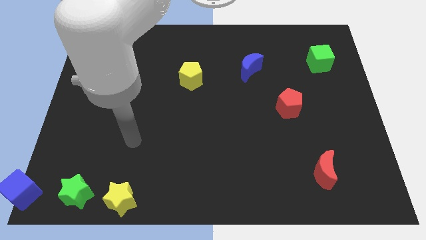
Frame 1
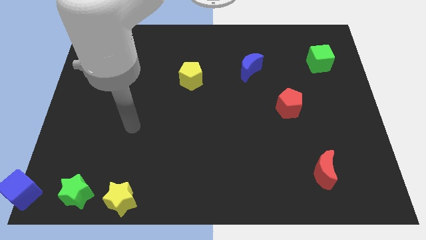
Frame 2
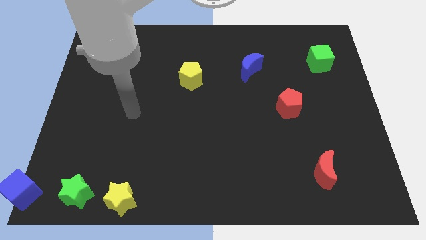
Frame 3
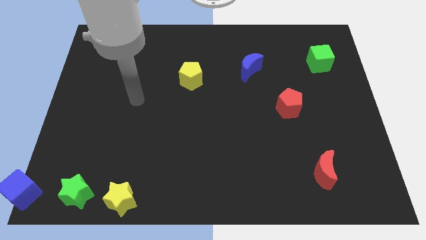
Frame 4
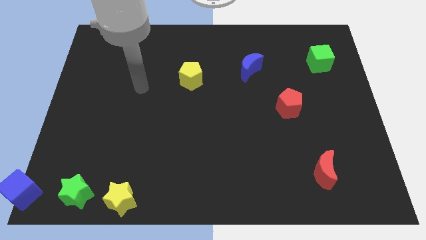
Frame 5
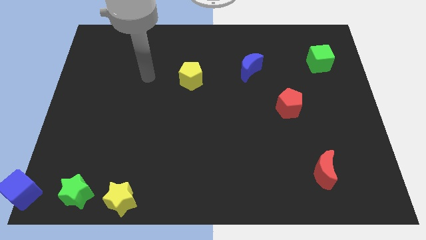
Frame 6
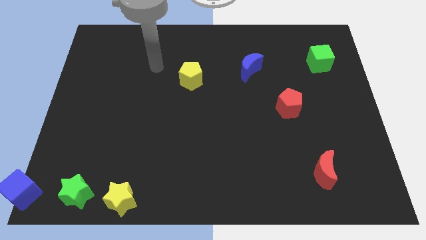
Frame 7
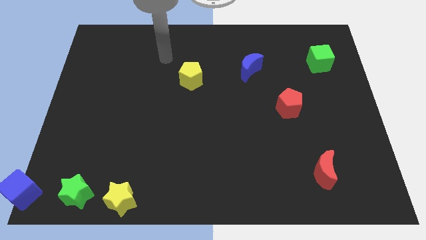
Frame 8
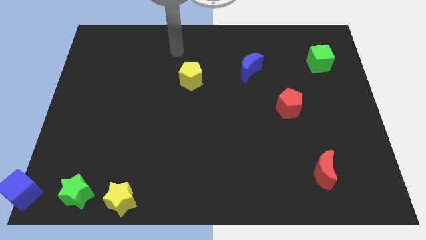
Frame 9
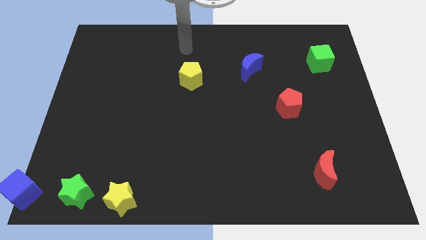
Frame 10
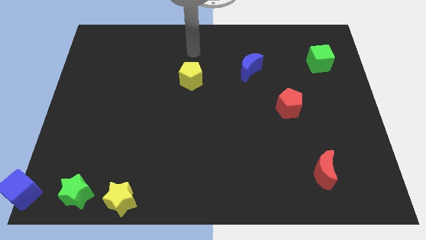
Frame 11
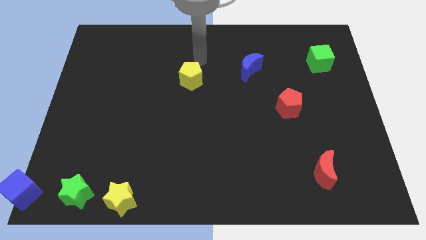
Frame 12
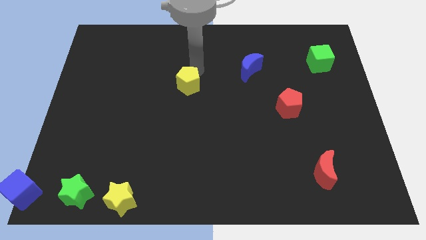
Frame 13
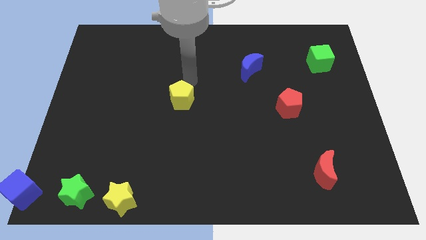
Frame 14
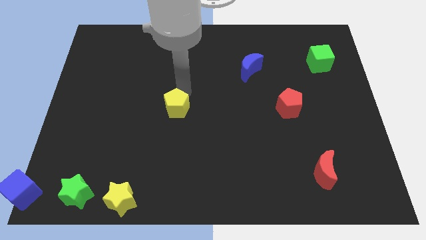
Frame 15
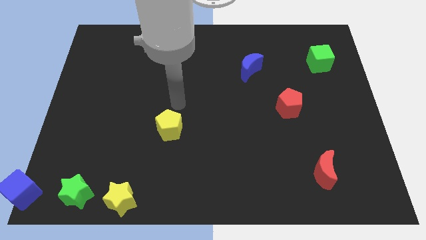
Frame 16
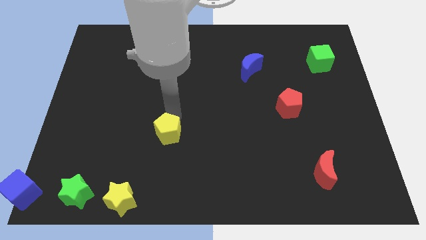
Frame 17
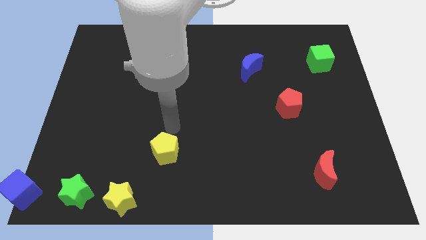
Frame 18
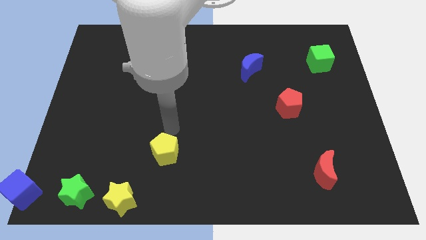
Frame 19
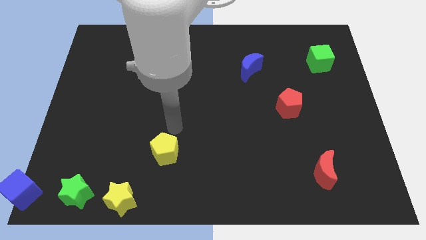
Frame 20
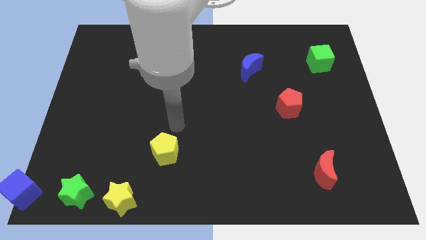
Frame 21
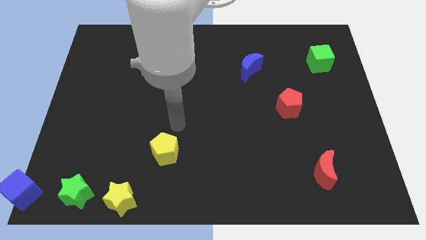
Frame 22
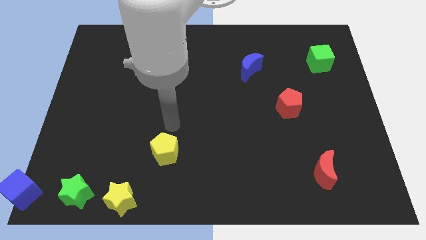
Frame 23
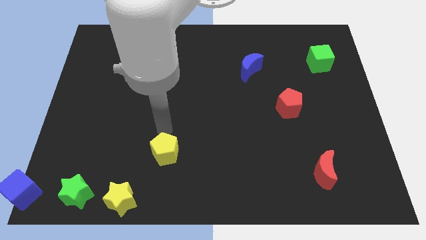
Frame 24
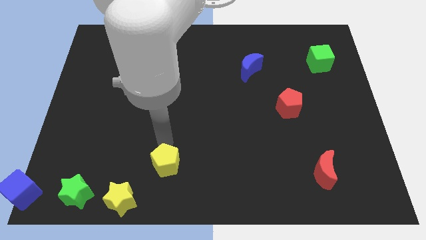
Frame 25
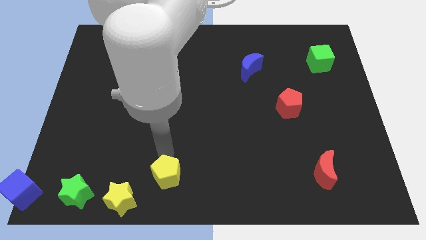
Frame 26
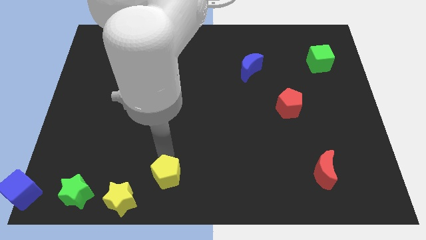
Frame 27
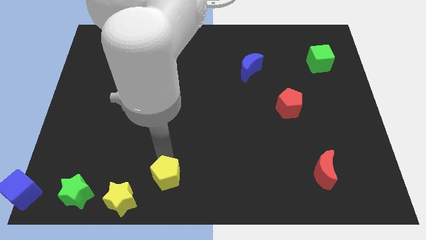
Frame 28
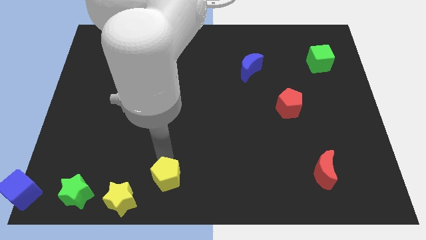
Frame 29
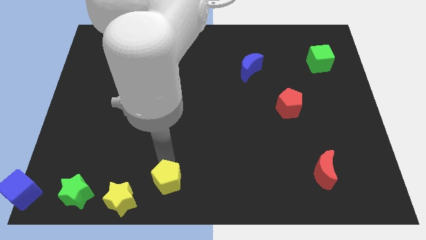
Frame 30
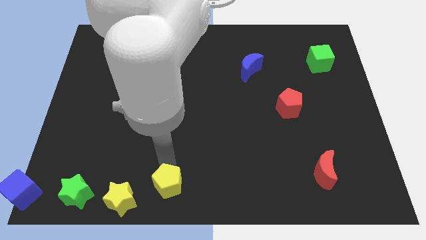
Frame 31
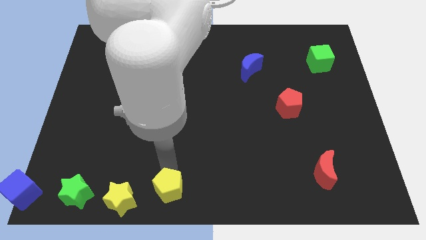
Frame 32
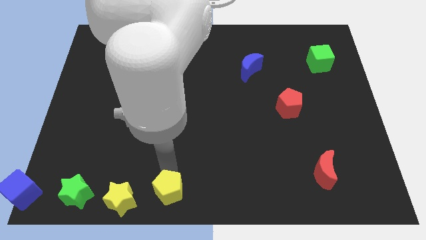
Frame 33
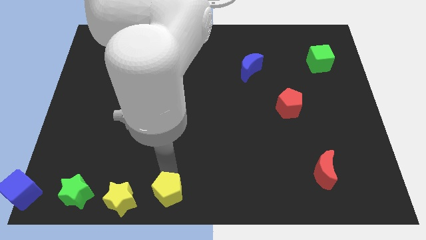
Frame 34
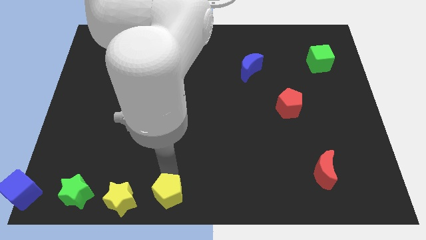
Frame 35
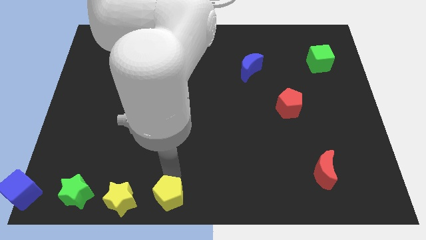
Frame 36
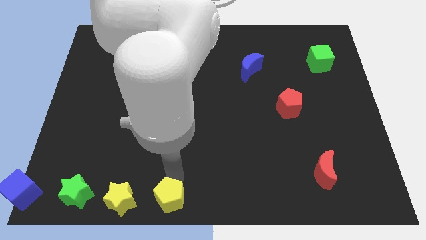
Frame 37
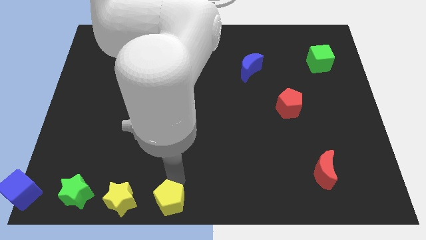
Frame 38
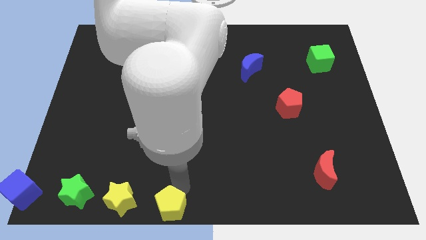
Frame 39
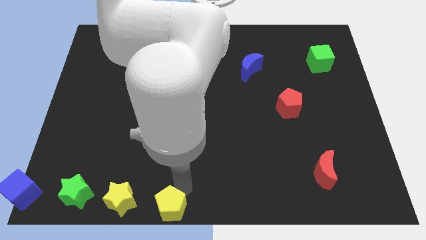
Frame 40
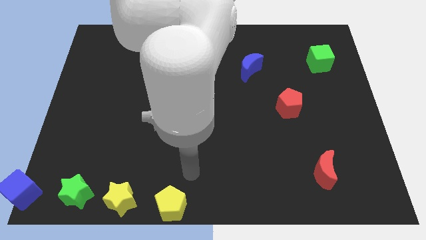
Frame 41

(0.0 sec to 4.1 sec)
move the yellow pentagon to the right side of the yellow star

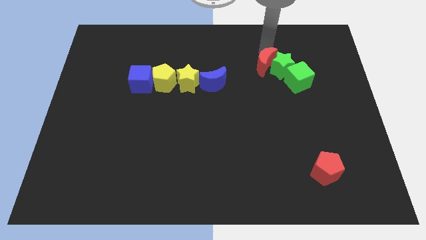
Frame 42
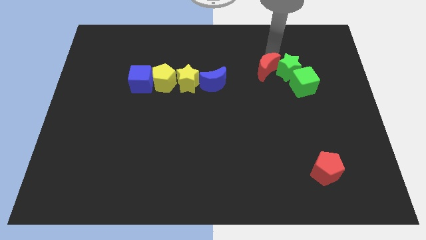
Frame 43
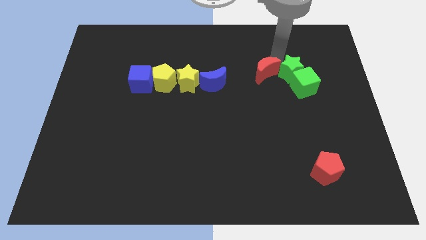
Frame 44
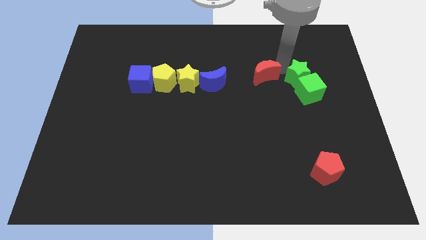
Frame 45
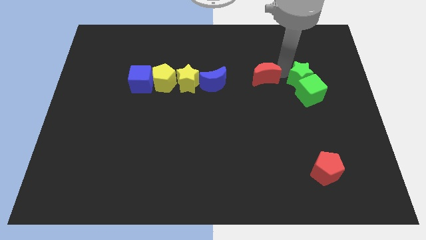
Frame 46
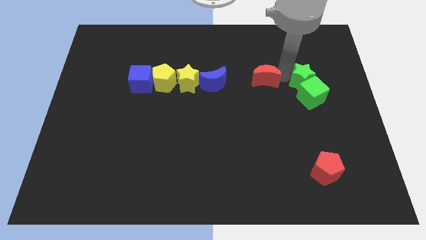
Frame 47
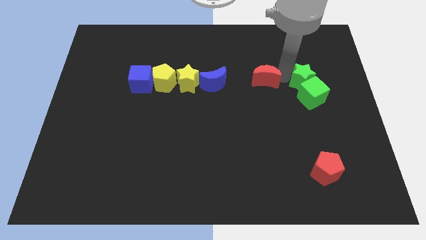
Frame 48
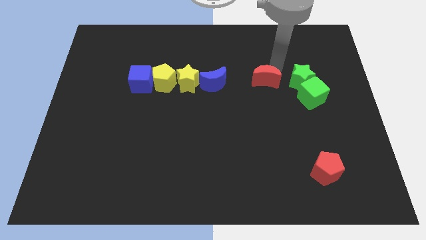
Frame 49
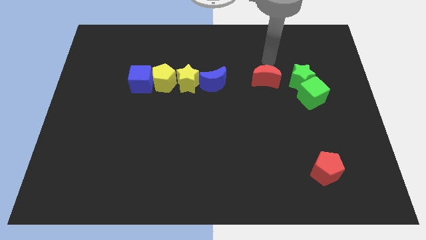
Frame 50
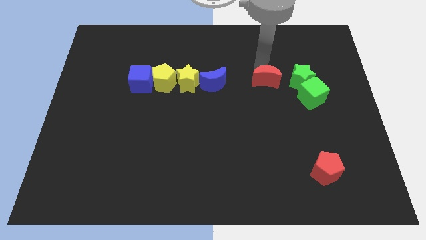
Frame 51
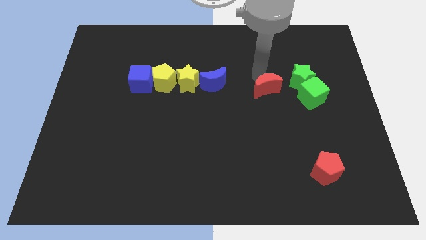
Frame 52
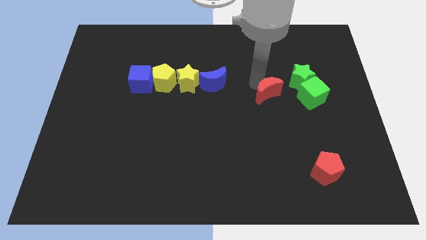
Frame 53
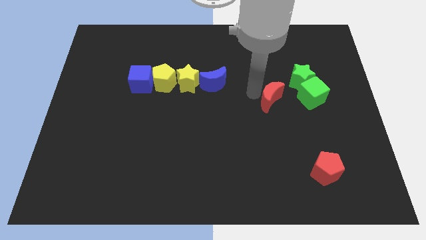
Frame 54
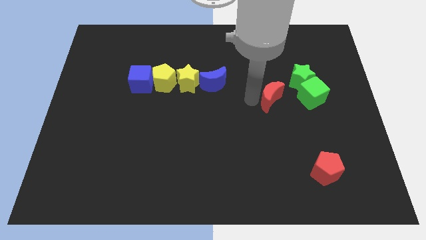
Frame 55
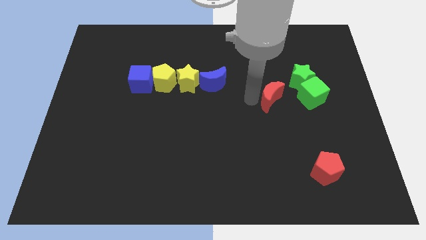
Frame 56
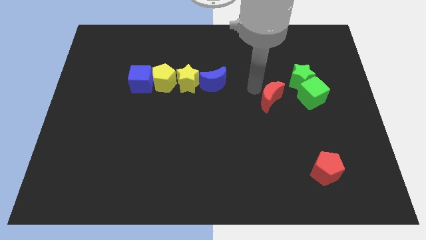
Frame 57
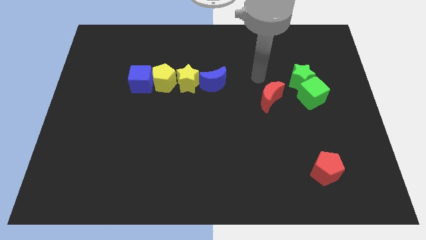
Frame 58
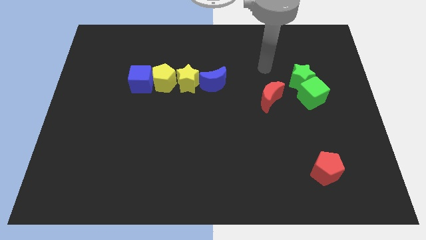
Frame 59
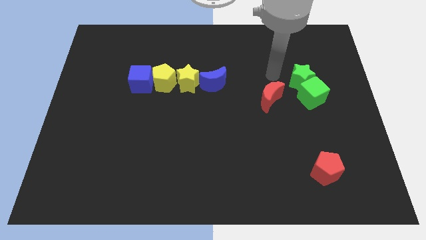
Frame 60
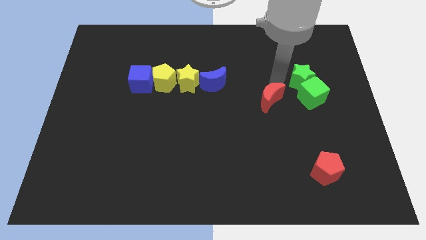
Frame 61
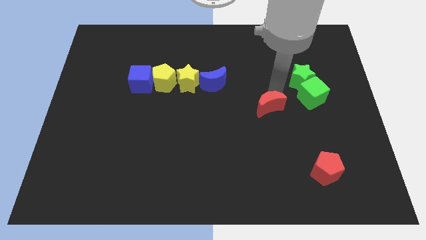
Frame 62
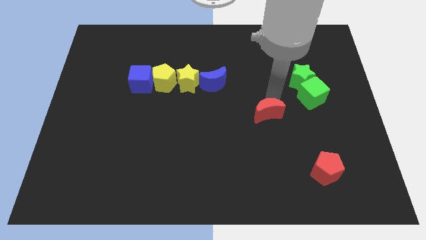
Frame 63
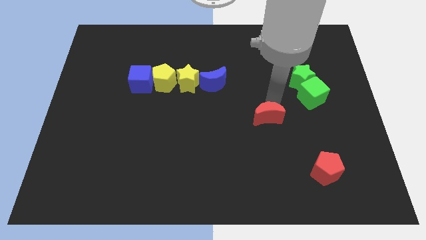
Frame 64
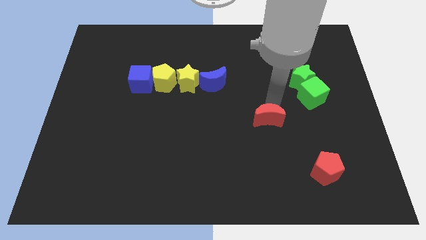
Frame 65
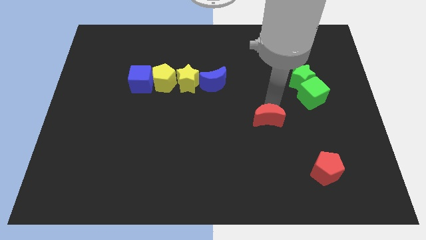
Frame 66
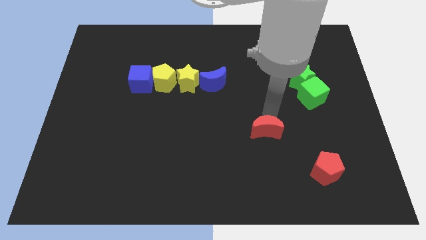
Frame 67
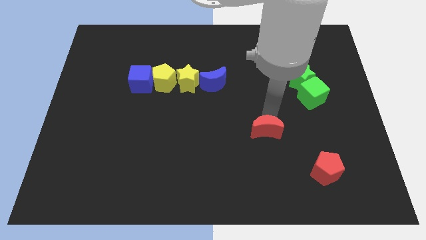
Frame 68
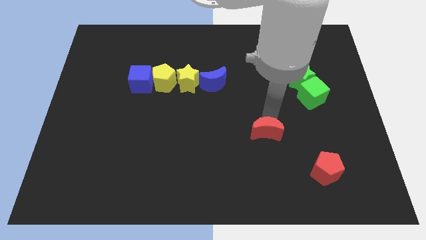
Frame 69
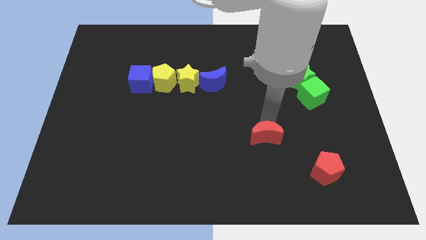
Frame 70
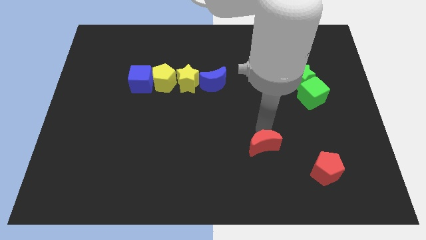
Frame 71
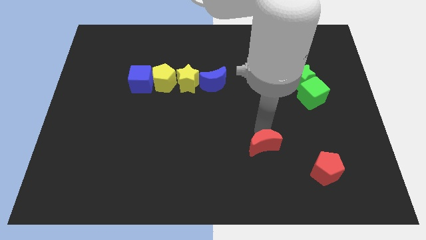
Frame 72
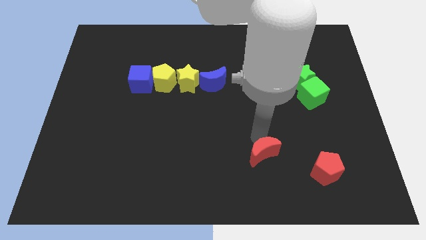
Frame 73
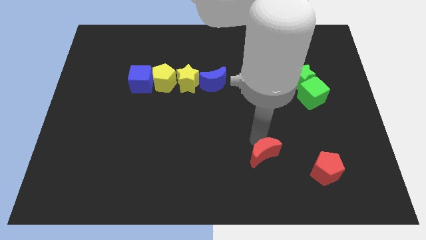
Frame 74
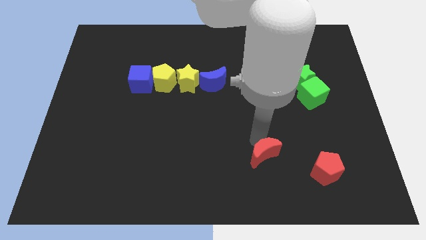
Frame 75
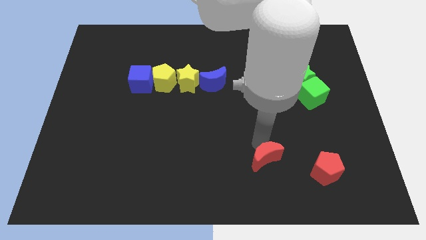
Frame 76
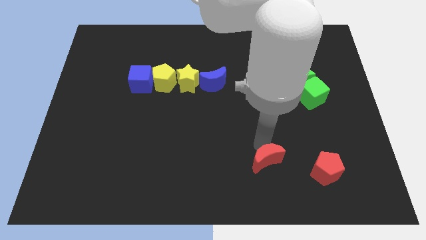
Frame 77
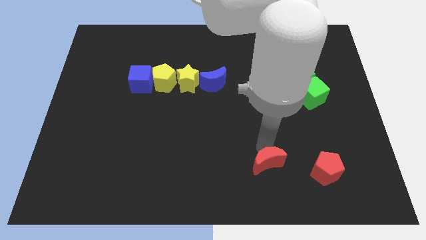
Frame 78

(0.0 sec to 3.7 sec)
separate the red crescent from the green star

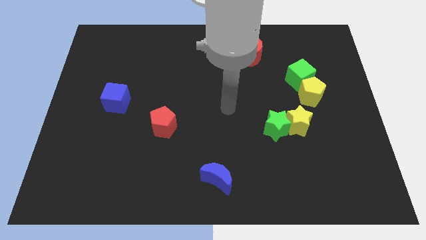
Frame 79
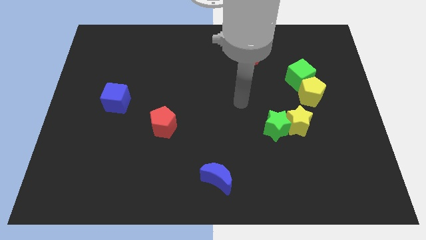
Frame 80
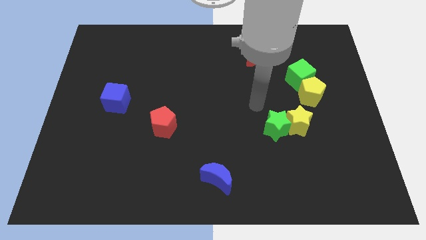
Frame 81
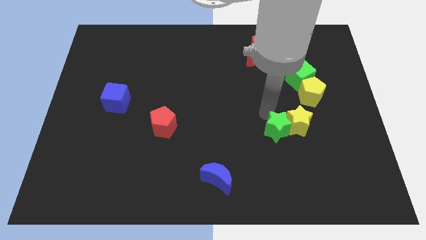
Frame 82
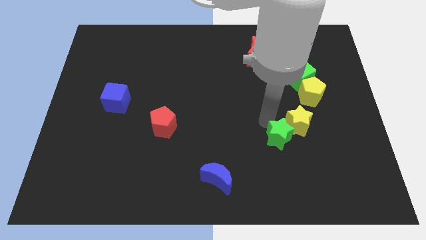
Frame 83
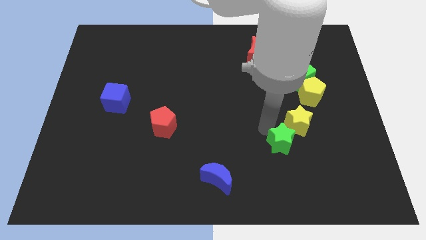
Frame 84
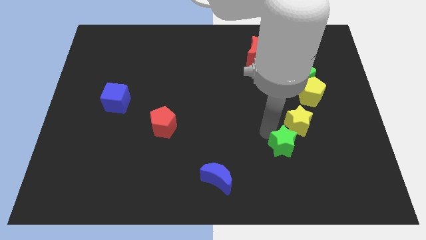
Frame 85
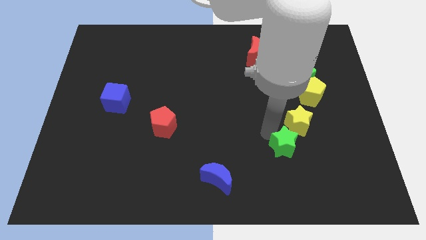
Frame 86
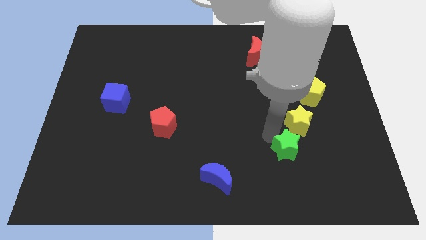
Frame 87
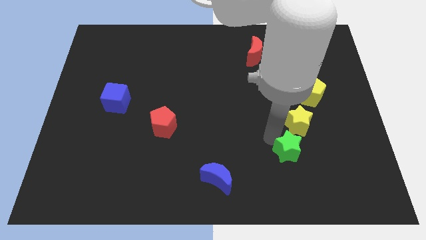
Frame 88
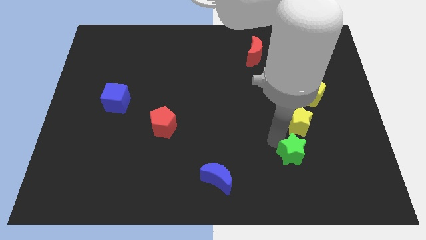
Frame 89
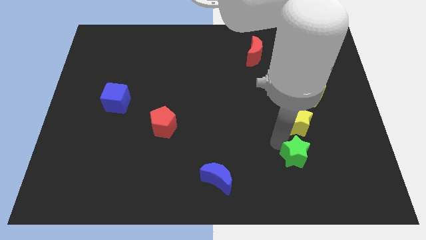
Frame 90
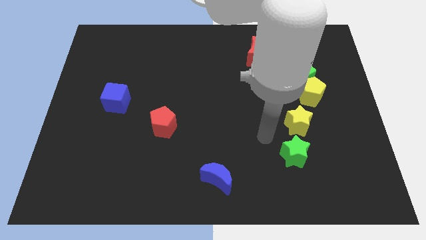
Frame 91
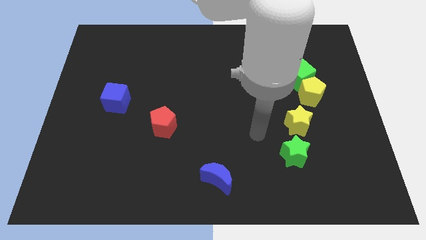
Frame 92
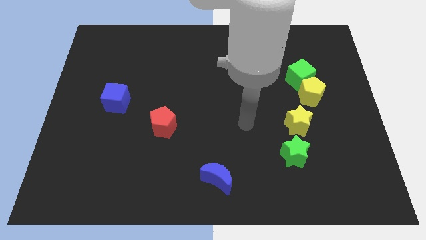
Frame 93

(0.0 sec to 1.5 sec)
push the green star to the bottom of the yellow star
